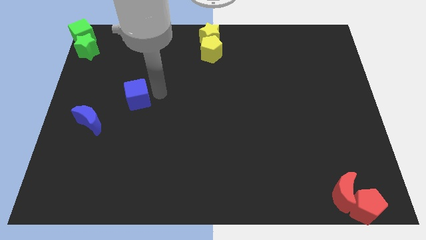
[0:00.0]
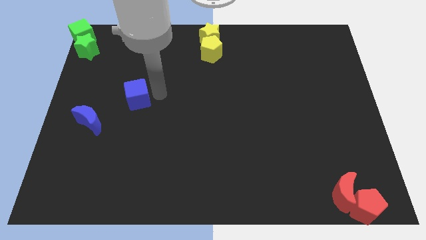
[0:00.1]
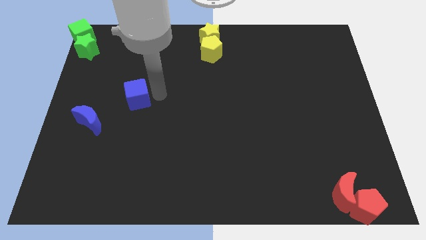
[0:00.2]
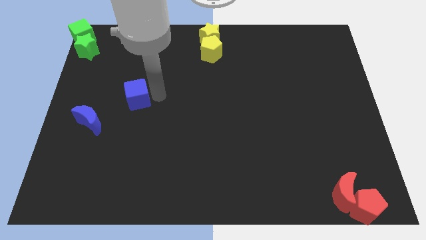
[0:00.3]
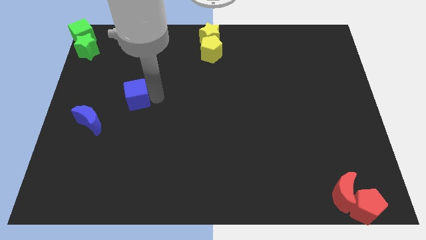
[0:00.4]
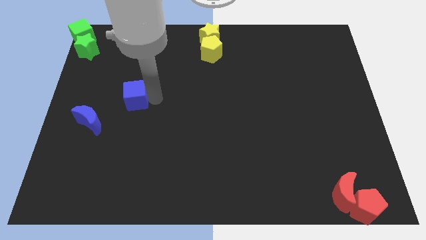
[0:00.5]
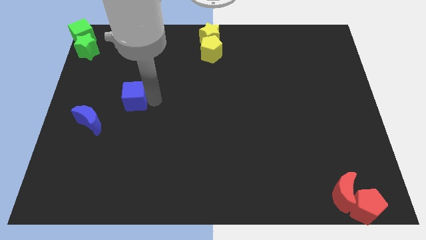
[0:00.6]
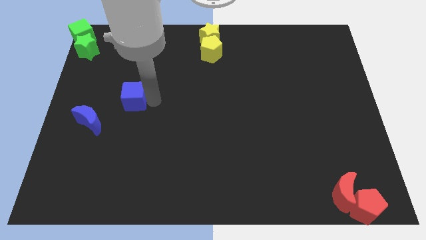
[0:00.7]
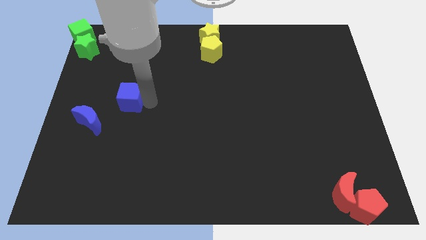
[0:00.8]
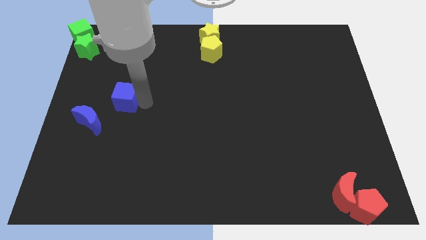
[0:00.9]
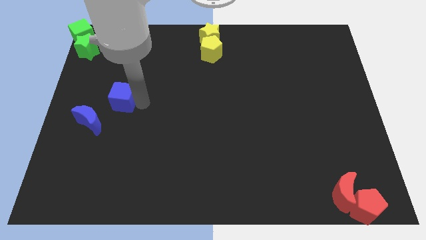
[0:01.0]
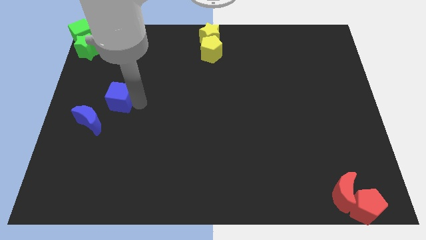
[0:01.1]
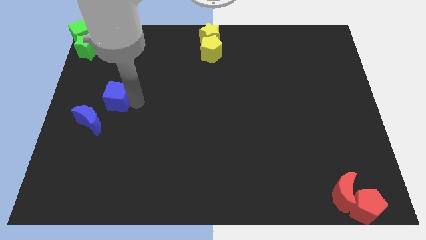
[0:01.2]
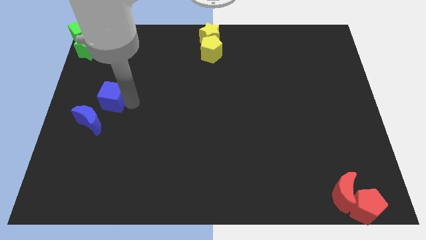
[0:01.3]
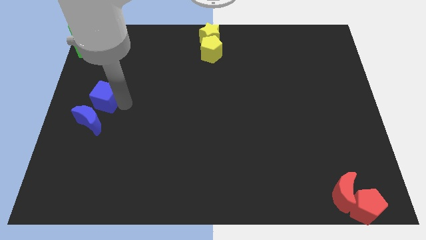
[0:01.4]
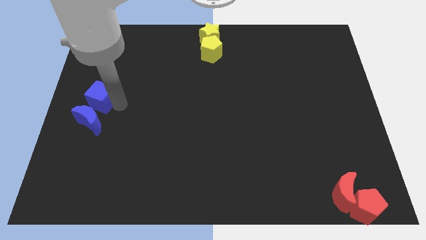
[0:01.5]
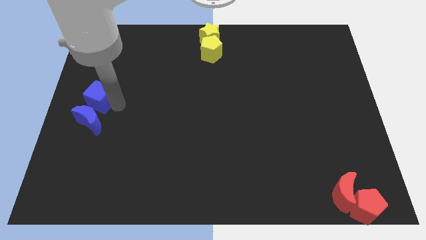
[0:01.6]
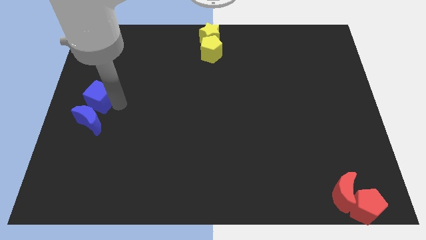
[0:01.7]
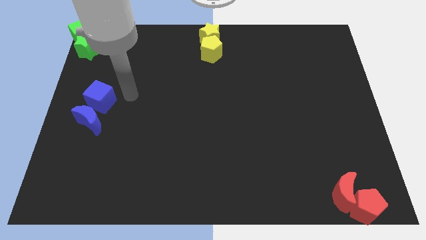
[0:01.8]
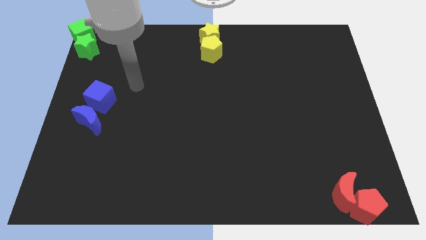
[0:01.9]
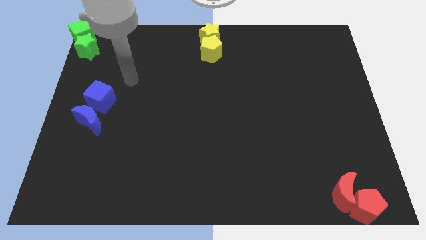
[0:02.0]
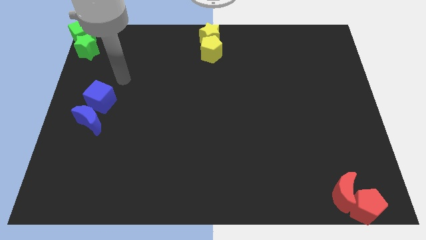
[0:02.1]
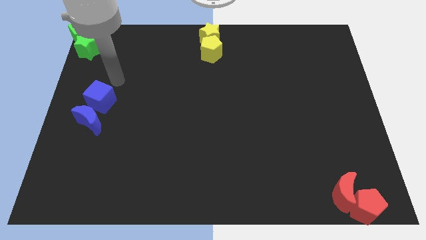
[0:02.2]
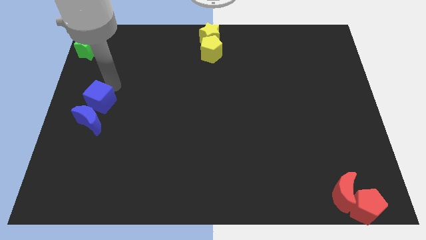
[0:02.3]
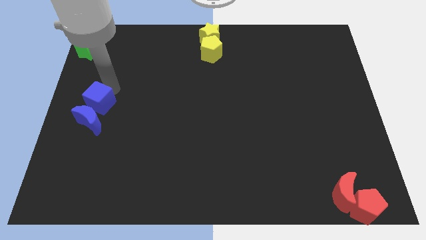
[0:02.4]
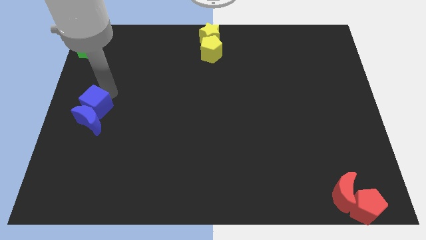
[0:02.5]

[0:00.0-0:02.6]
move the blue cube to the top of the blue crescent

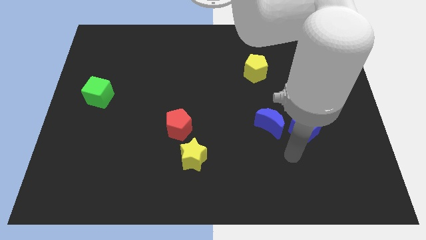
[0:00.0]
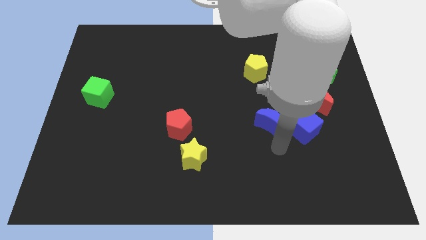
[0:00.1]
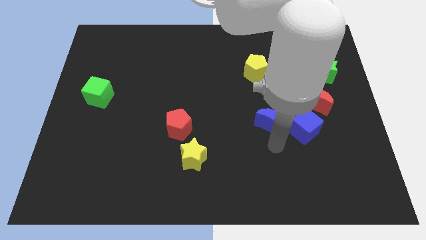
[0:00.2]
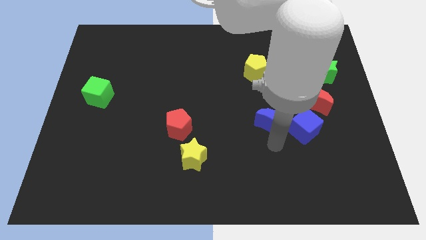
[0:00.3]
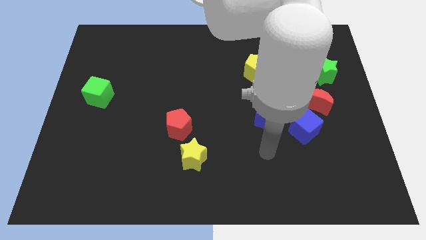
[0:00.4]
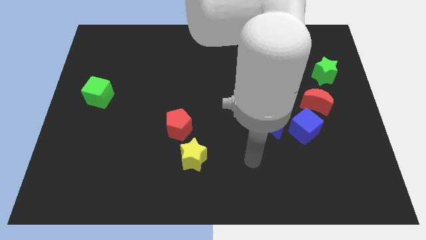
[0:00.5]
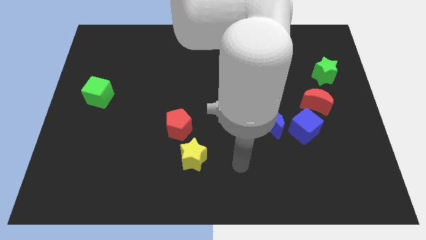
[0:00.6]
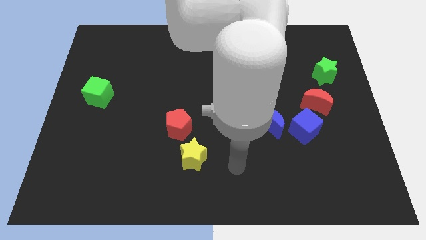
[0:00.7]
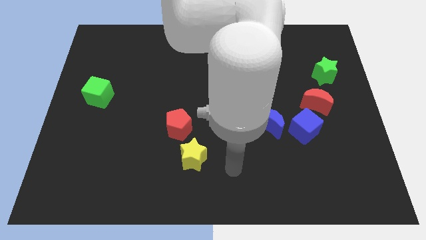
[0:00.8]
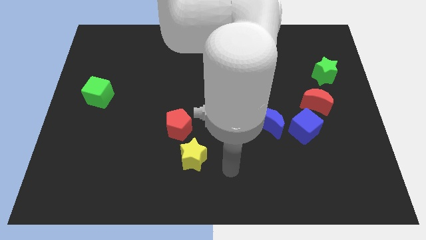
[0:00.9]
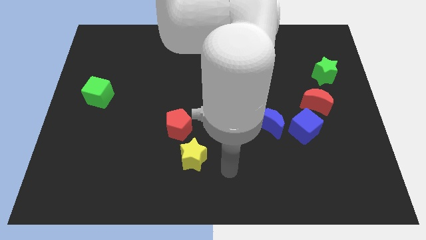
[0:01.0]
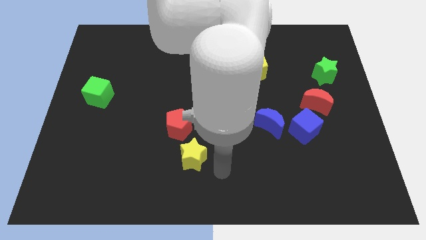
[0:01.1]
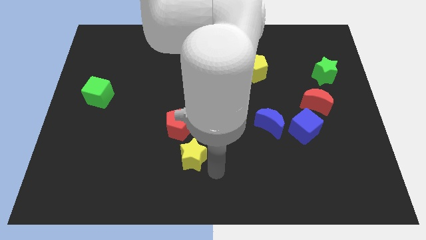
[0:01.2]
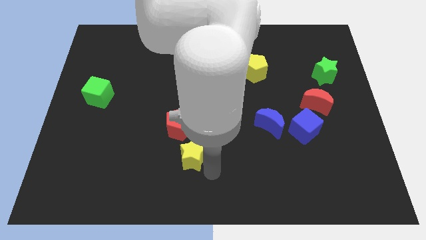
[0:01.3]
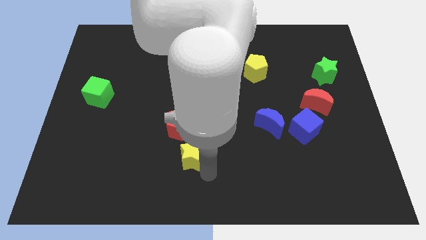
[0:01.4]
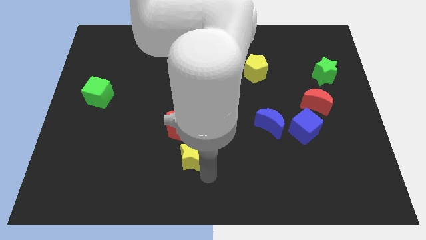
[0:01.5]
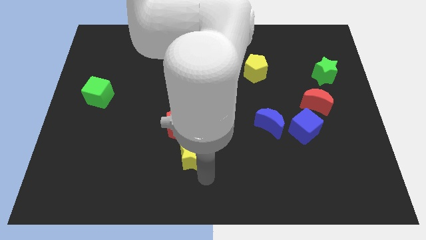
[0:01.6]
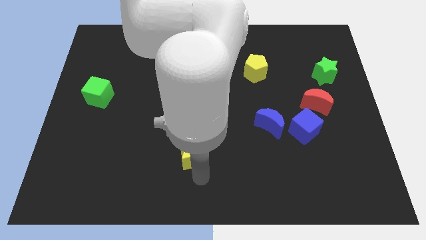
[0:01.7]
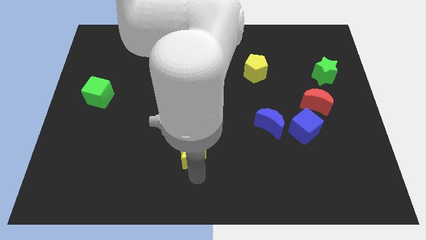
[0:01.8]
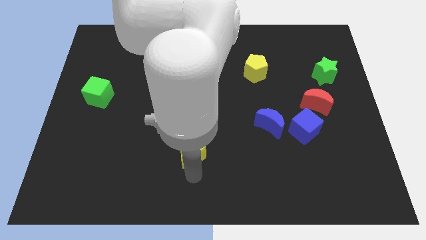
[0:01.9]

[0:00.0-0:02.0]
move your arm and point below the yellow star

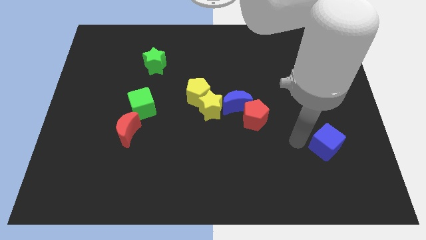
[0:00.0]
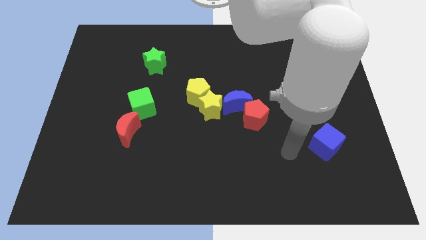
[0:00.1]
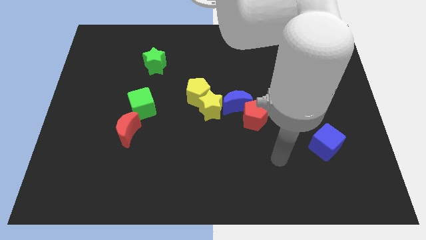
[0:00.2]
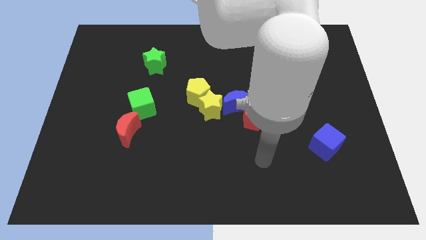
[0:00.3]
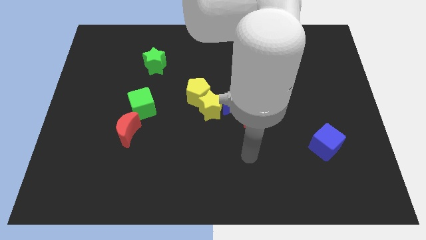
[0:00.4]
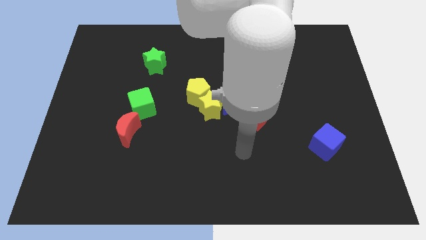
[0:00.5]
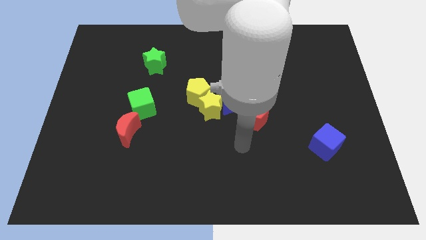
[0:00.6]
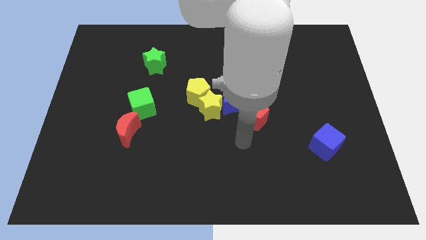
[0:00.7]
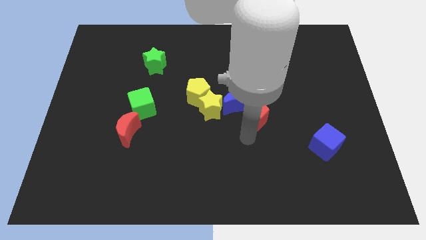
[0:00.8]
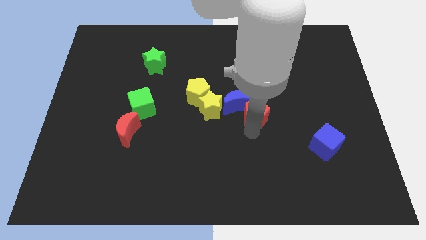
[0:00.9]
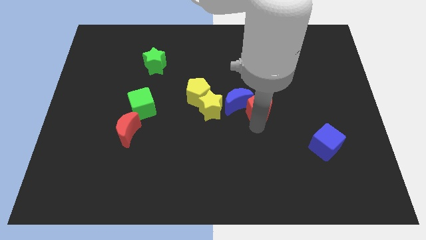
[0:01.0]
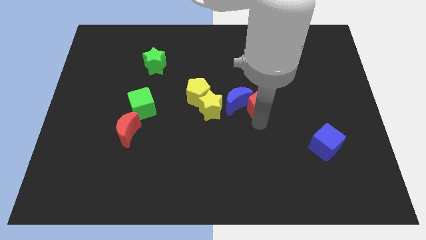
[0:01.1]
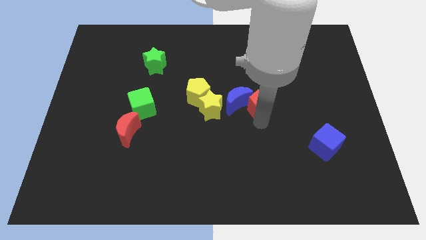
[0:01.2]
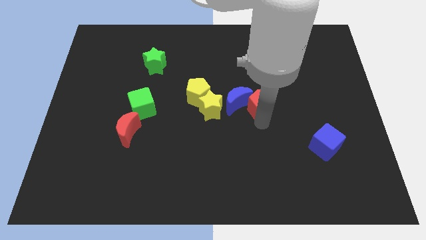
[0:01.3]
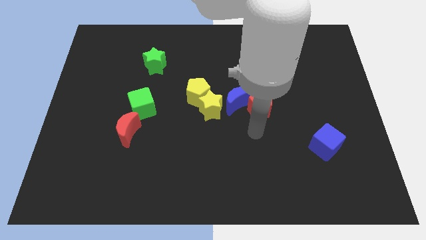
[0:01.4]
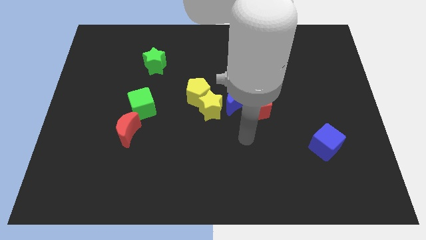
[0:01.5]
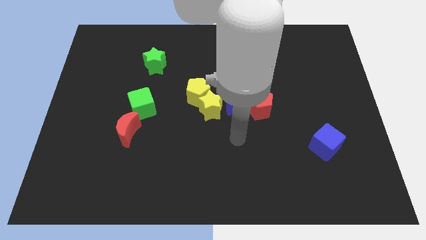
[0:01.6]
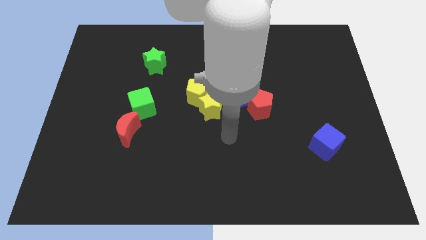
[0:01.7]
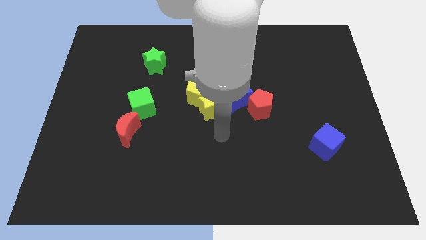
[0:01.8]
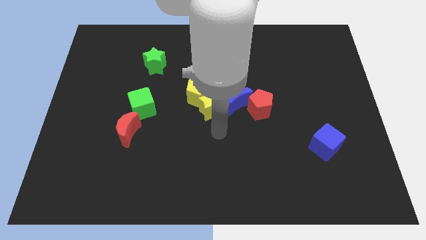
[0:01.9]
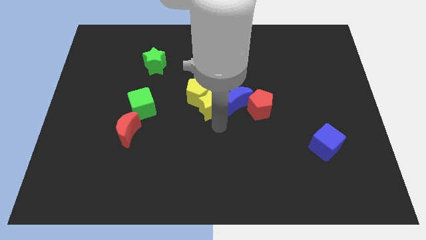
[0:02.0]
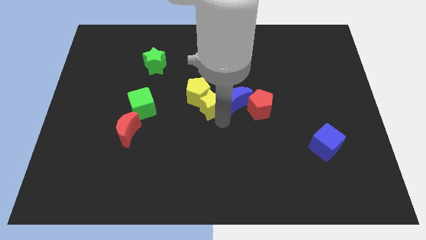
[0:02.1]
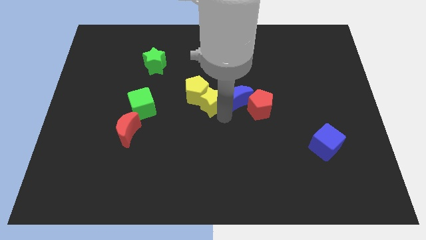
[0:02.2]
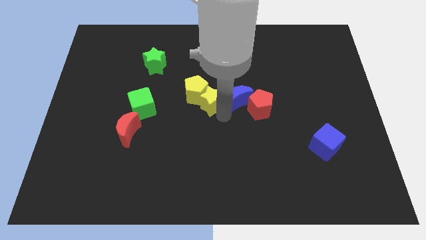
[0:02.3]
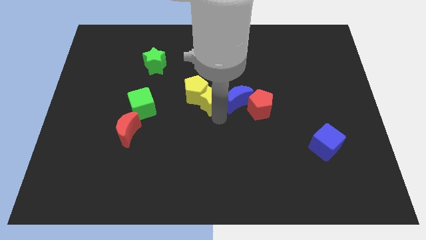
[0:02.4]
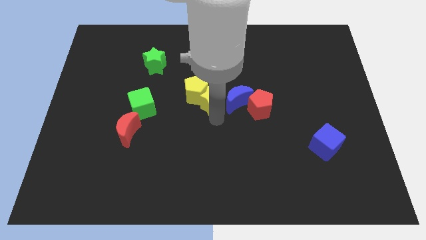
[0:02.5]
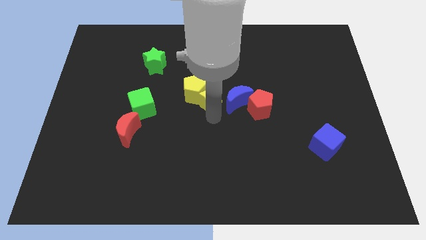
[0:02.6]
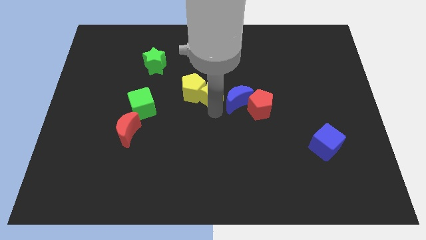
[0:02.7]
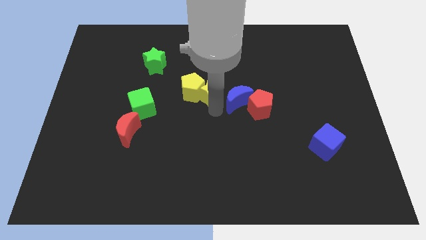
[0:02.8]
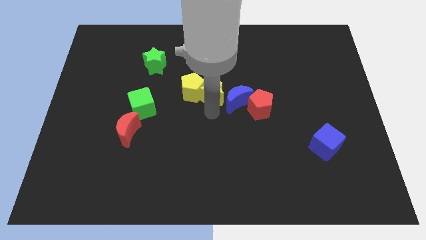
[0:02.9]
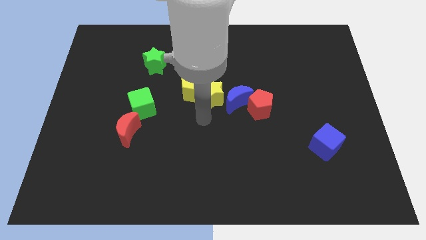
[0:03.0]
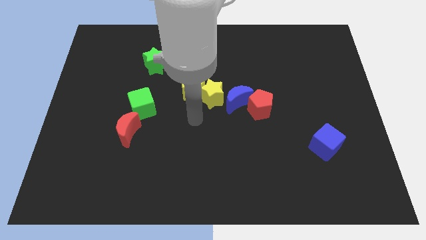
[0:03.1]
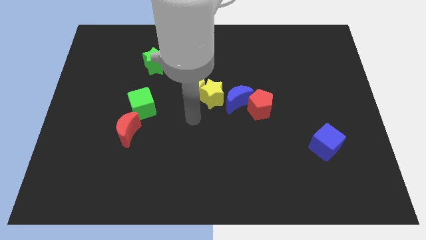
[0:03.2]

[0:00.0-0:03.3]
make a diagonal line with the red pentagon blue crescent and yellow blocks

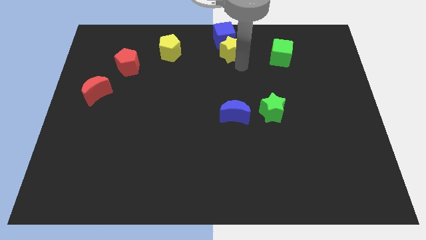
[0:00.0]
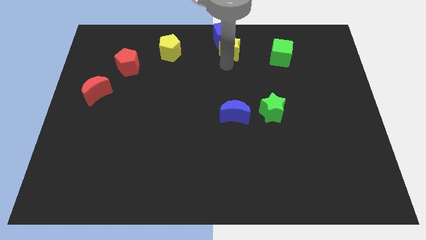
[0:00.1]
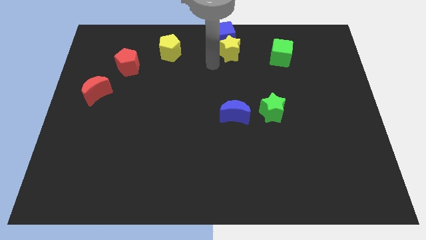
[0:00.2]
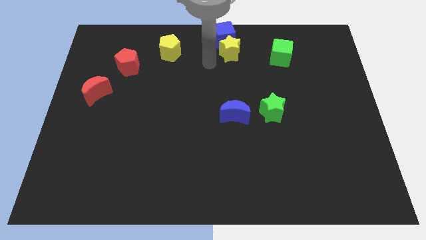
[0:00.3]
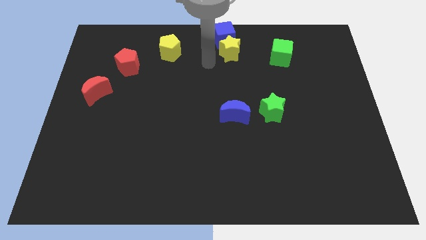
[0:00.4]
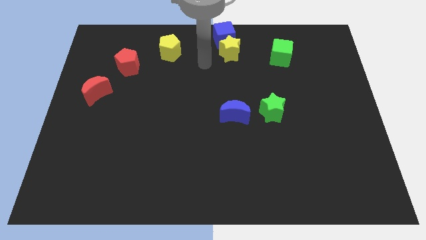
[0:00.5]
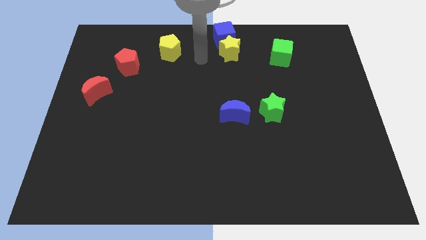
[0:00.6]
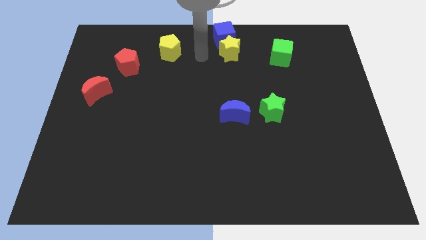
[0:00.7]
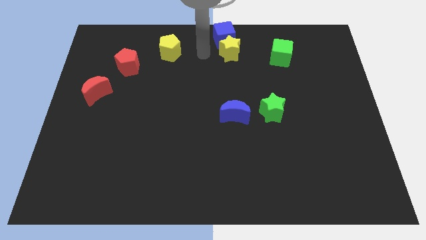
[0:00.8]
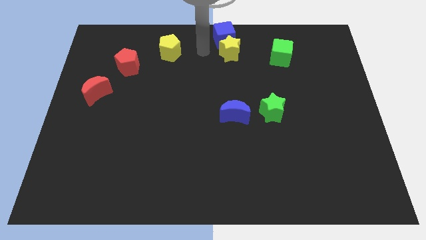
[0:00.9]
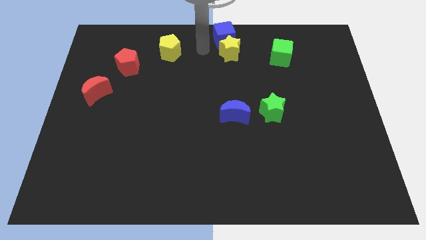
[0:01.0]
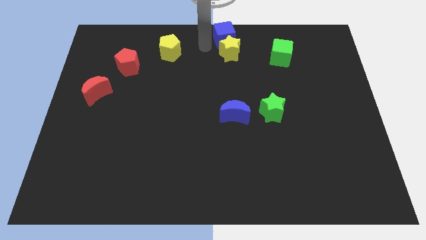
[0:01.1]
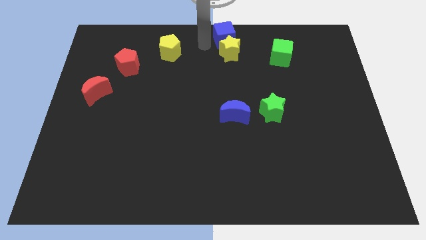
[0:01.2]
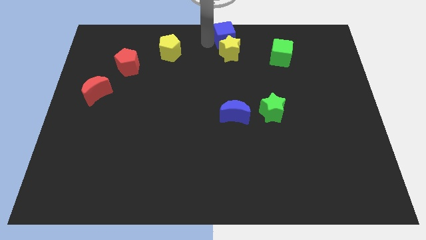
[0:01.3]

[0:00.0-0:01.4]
slightly move the yellow star below the blue cube
